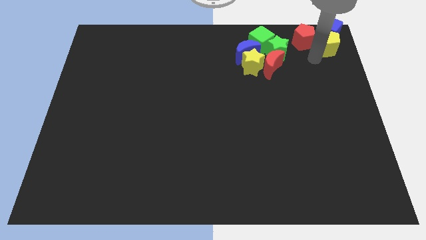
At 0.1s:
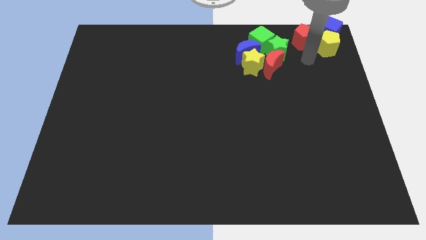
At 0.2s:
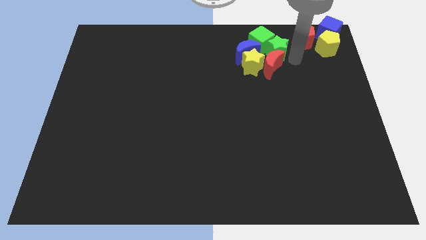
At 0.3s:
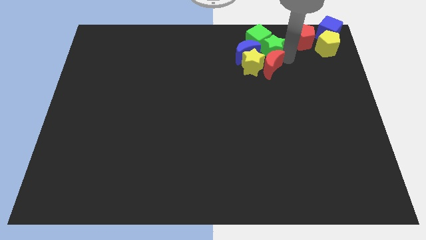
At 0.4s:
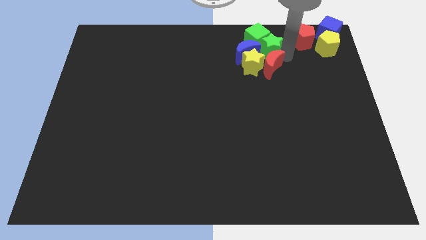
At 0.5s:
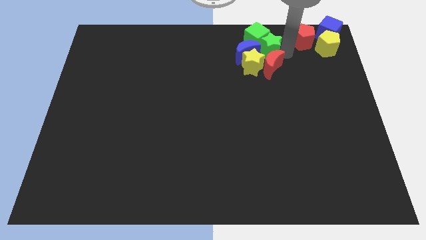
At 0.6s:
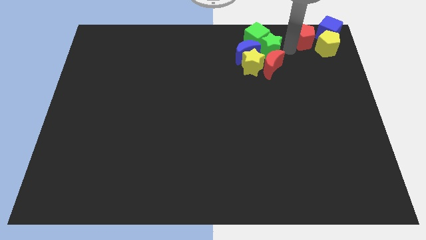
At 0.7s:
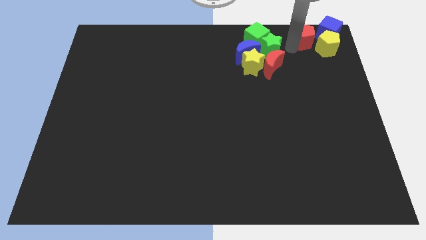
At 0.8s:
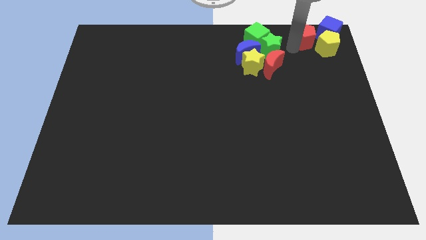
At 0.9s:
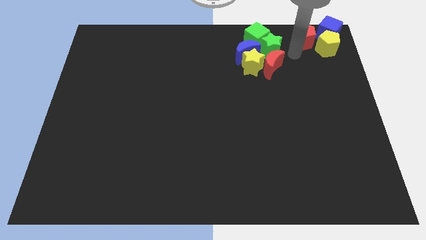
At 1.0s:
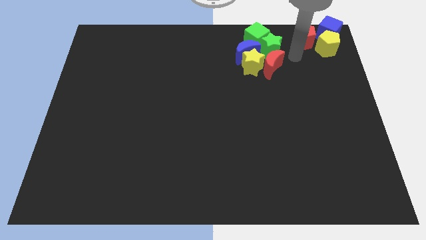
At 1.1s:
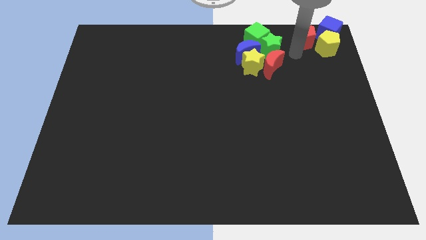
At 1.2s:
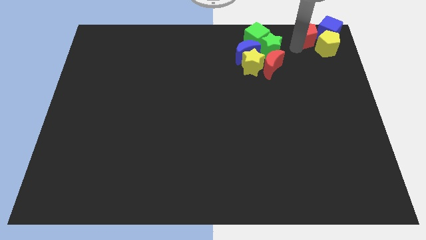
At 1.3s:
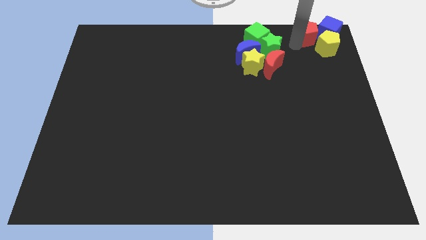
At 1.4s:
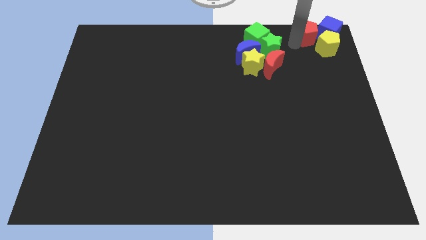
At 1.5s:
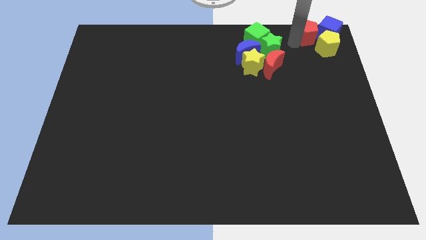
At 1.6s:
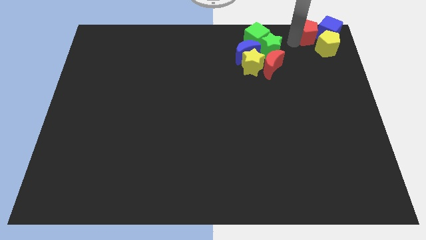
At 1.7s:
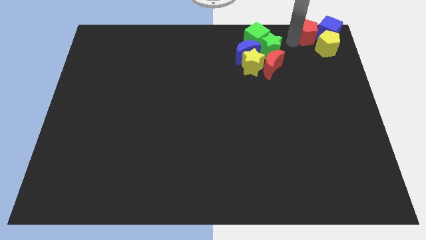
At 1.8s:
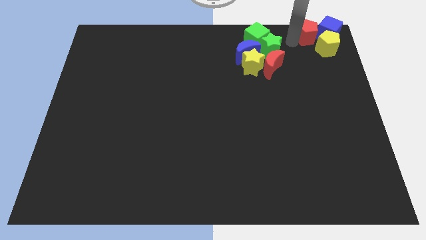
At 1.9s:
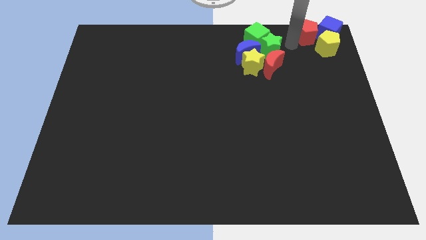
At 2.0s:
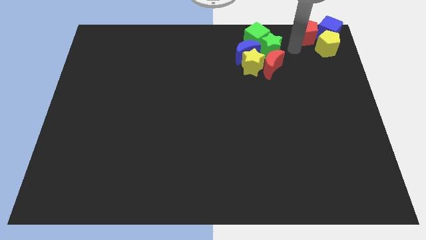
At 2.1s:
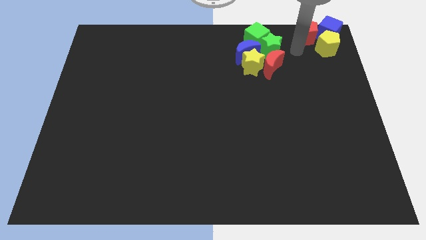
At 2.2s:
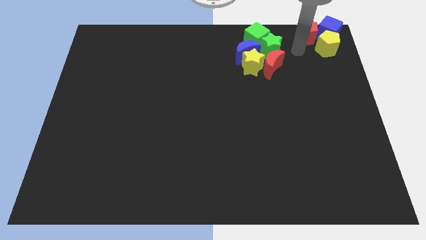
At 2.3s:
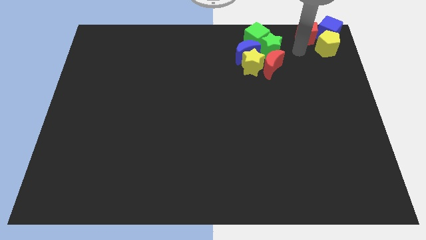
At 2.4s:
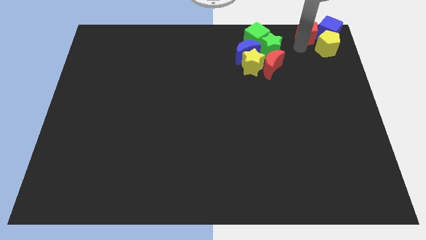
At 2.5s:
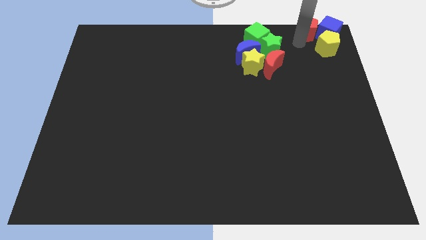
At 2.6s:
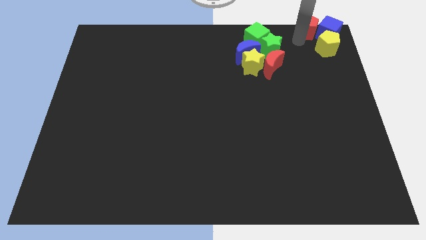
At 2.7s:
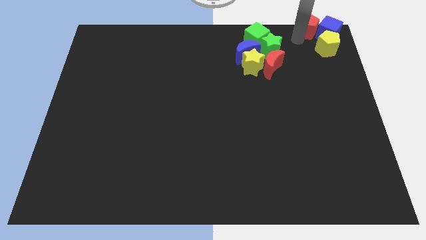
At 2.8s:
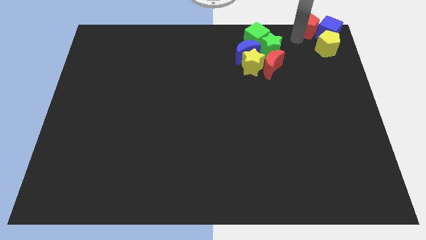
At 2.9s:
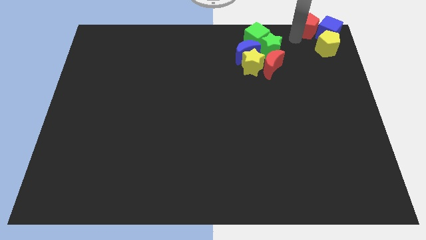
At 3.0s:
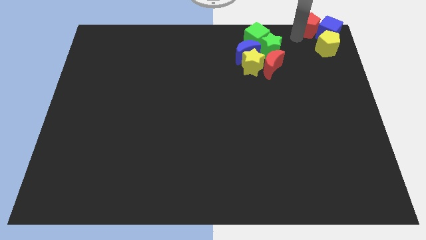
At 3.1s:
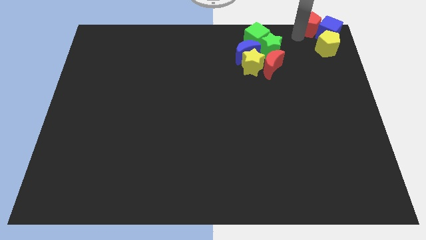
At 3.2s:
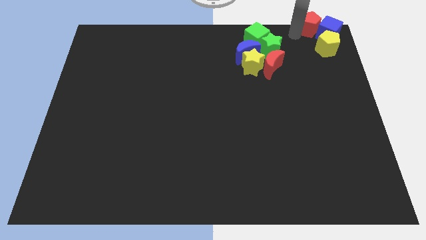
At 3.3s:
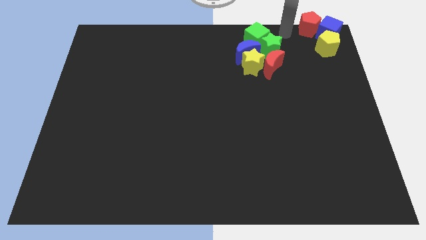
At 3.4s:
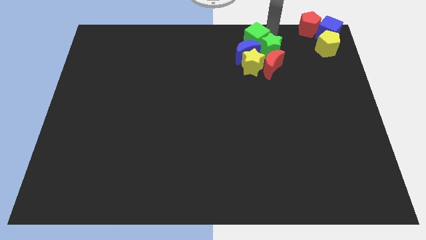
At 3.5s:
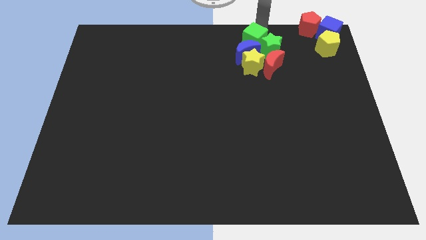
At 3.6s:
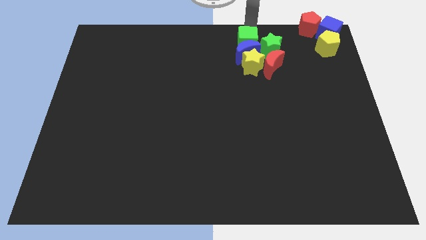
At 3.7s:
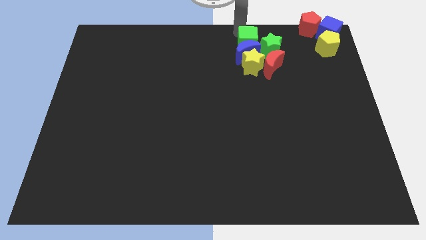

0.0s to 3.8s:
push the red pentagon to the left of blue cube

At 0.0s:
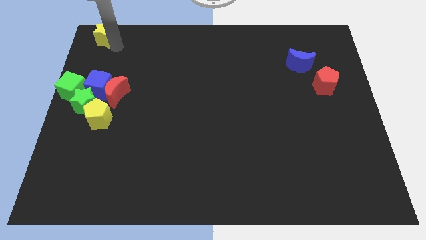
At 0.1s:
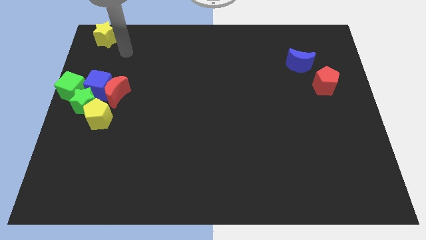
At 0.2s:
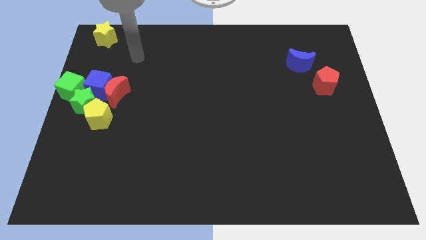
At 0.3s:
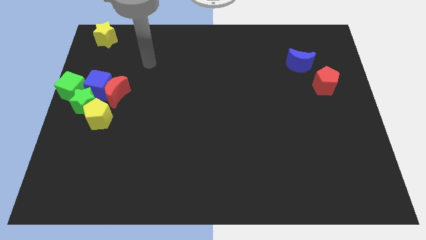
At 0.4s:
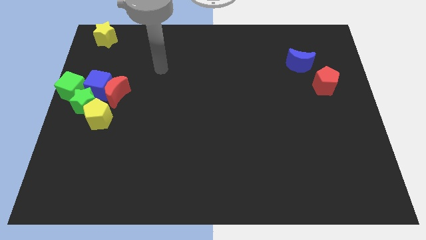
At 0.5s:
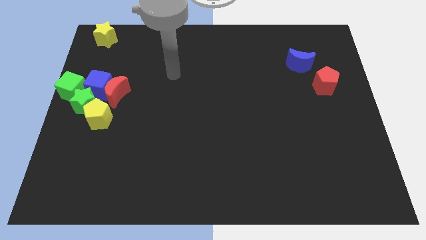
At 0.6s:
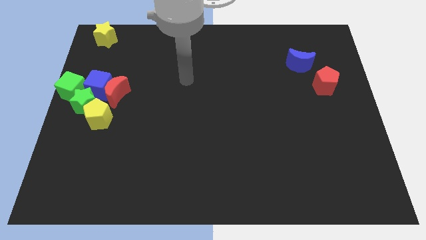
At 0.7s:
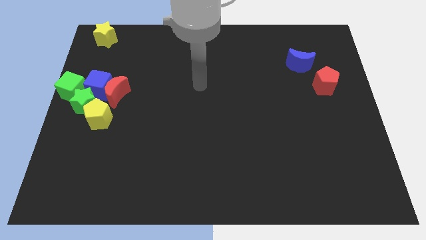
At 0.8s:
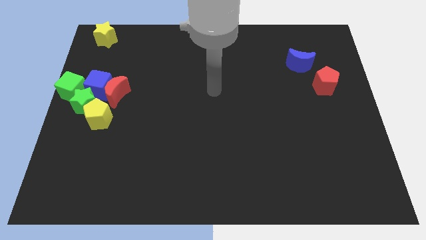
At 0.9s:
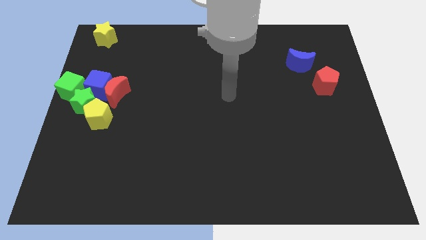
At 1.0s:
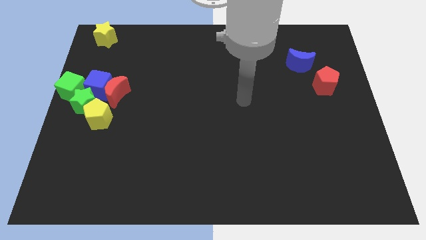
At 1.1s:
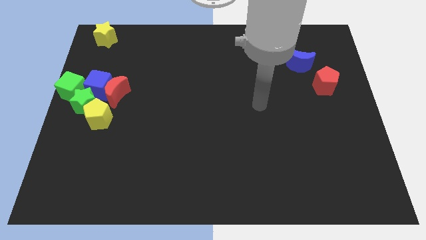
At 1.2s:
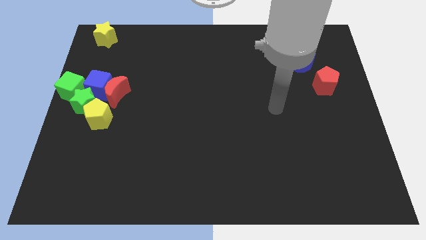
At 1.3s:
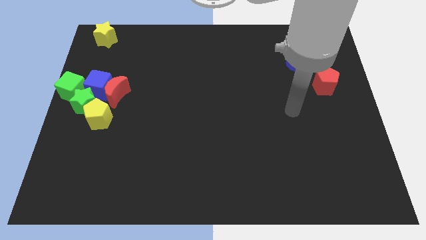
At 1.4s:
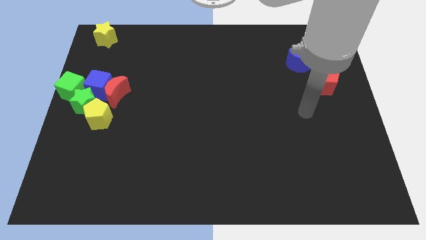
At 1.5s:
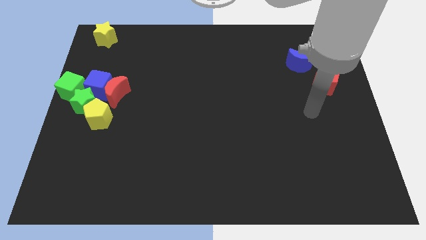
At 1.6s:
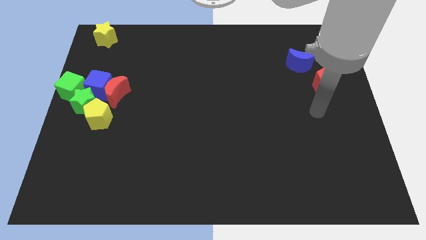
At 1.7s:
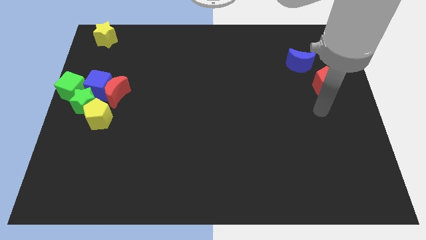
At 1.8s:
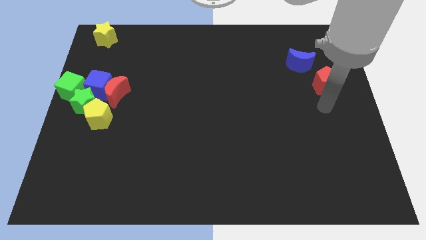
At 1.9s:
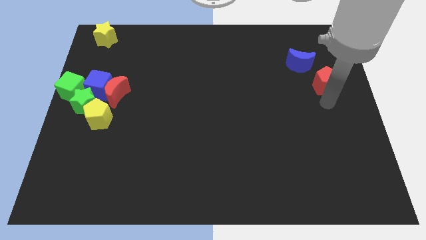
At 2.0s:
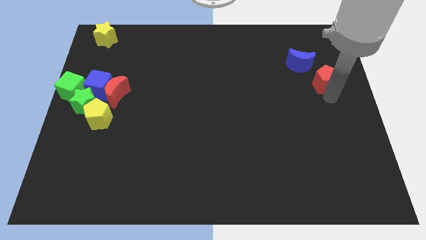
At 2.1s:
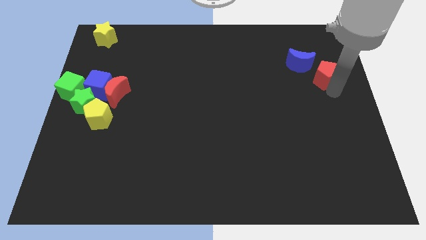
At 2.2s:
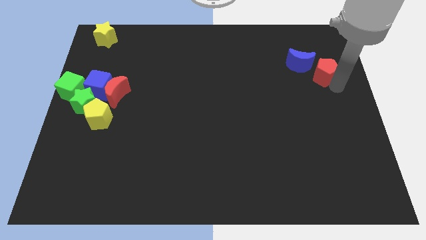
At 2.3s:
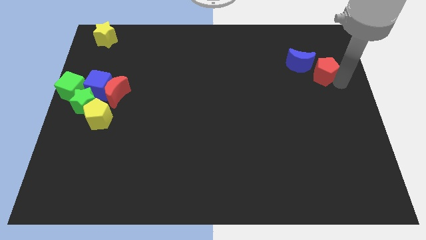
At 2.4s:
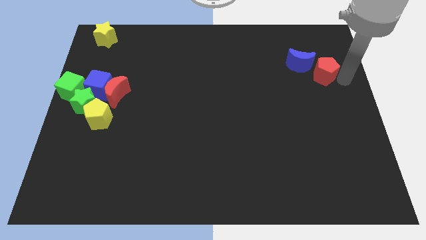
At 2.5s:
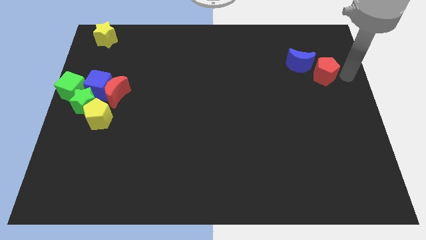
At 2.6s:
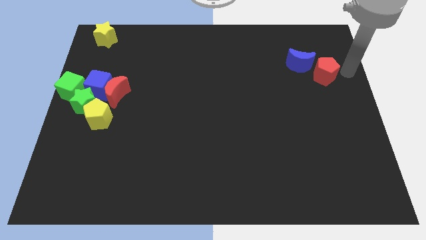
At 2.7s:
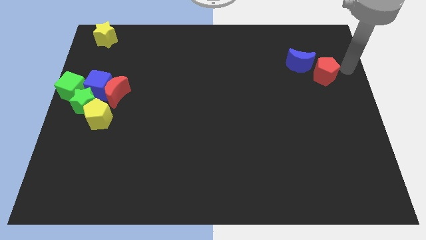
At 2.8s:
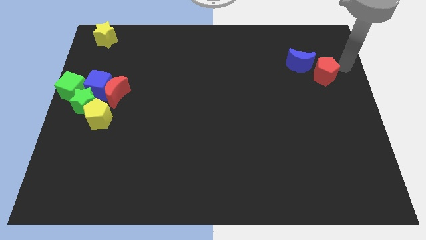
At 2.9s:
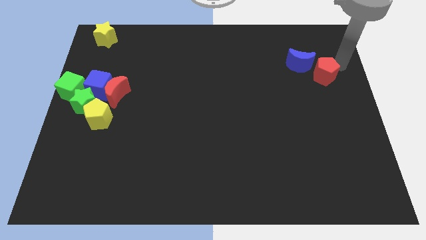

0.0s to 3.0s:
move the red pentagon slightly towards the bottom right of the blue crescent

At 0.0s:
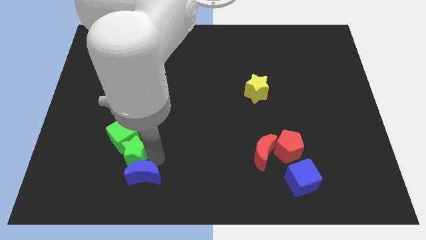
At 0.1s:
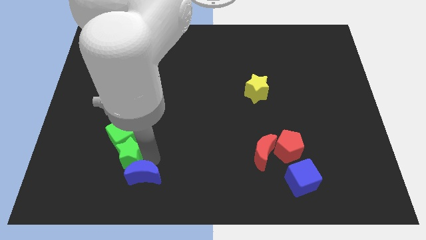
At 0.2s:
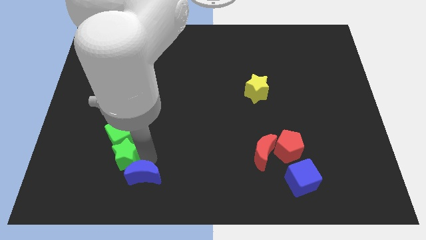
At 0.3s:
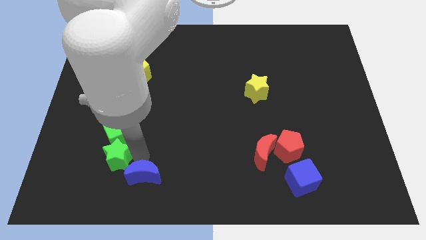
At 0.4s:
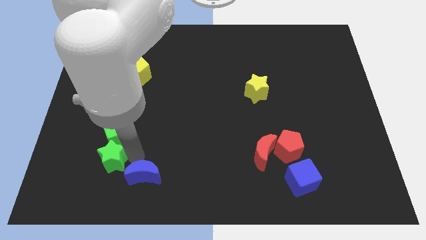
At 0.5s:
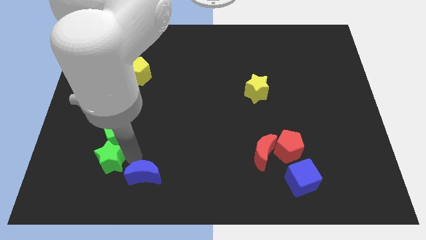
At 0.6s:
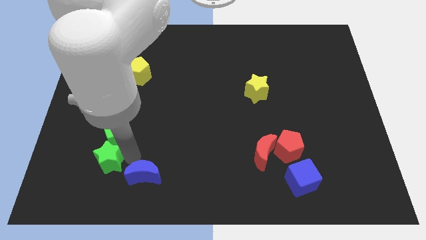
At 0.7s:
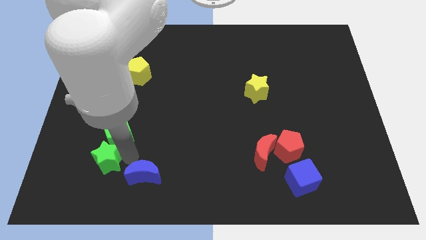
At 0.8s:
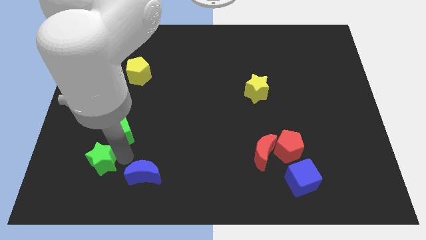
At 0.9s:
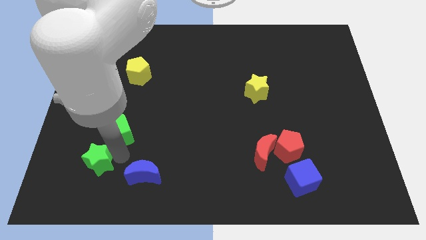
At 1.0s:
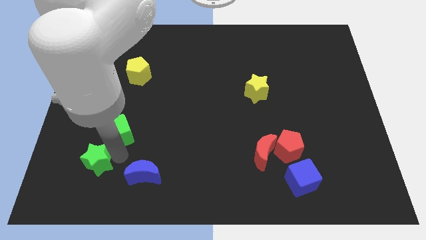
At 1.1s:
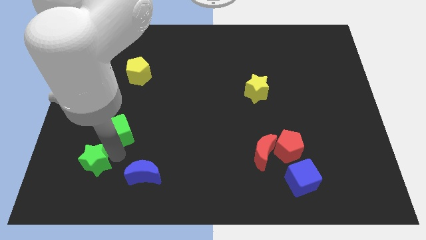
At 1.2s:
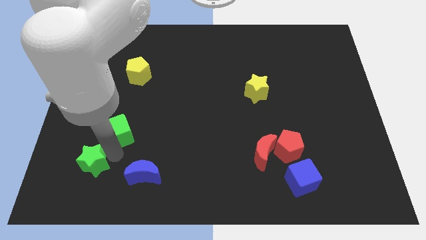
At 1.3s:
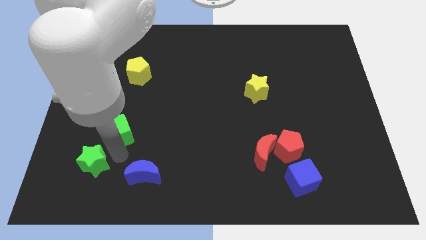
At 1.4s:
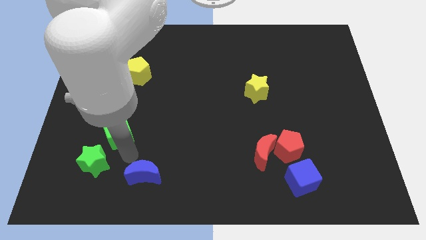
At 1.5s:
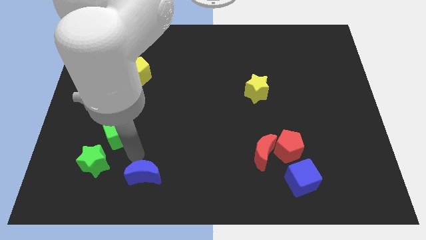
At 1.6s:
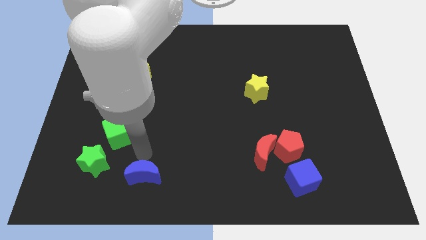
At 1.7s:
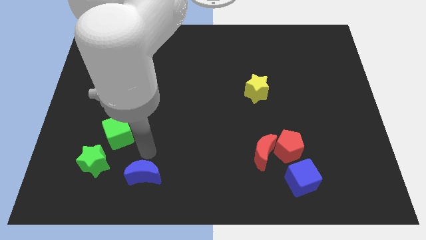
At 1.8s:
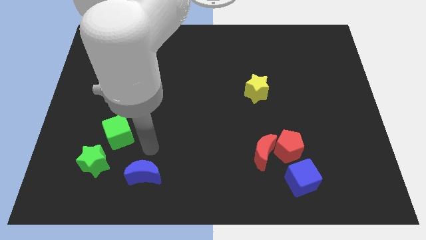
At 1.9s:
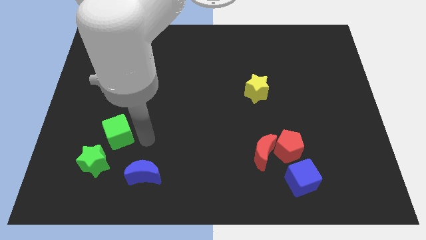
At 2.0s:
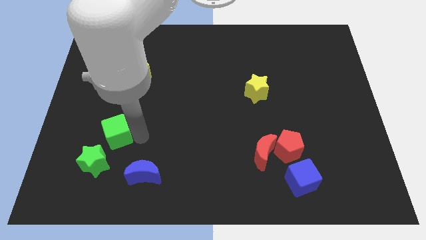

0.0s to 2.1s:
separate green star from green cube and blue moon
